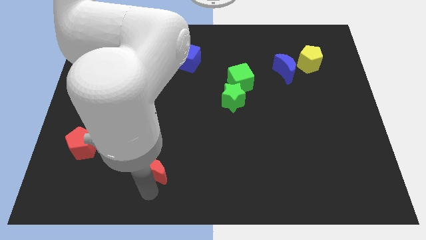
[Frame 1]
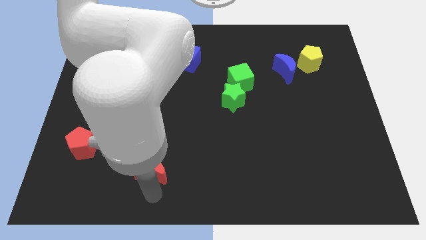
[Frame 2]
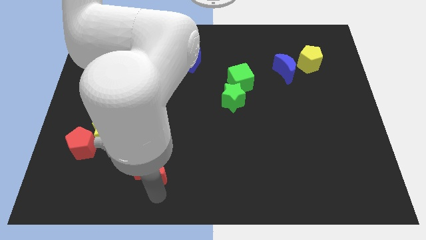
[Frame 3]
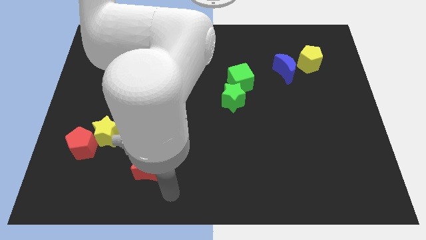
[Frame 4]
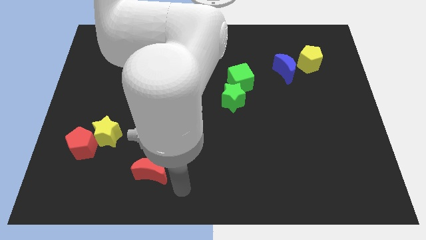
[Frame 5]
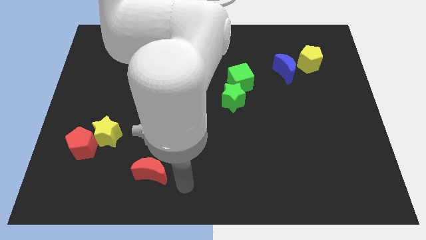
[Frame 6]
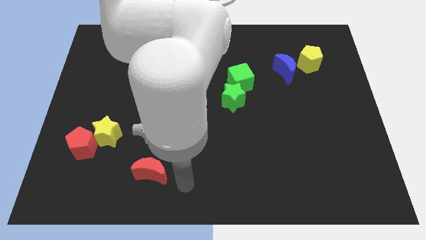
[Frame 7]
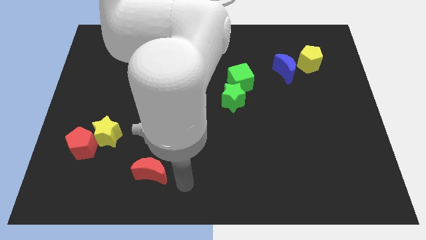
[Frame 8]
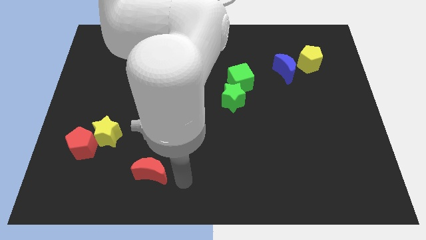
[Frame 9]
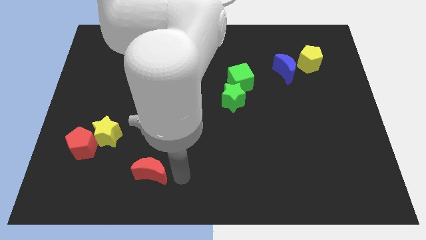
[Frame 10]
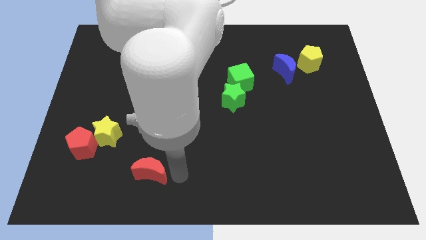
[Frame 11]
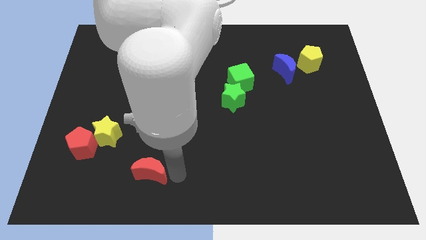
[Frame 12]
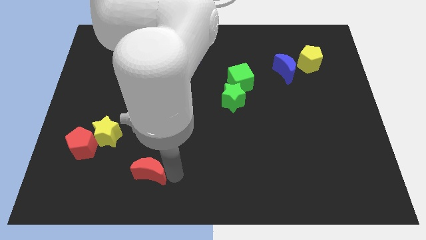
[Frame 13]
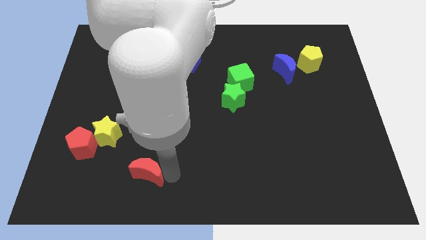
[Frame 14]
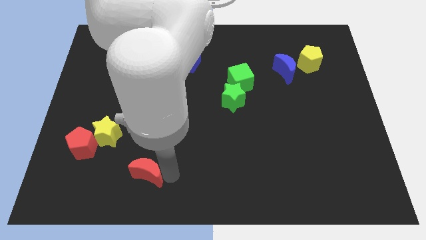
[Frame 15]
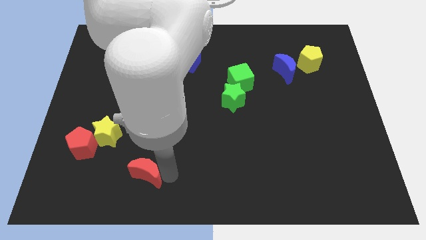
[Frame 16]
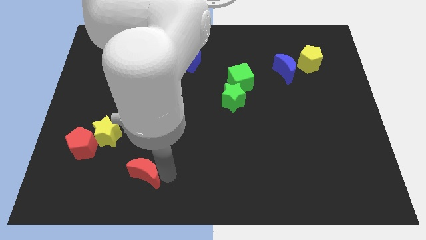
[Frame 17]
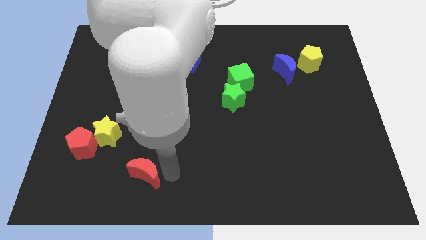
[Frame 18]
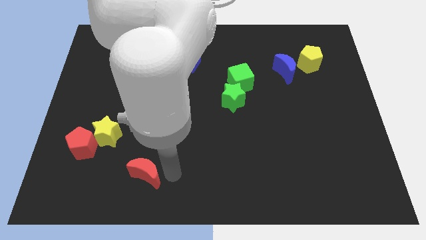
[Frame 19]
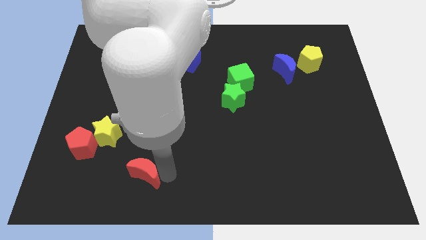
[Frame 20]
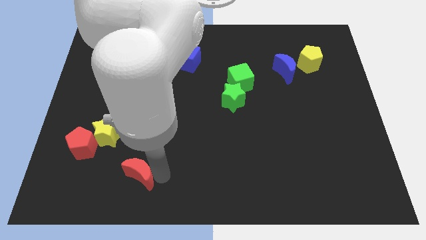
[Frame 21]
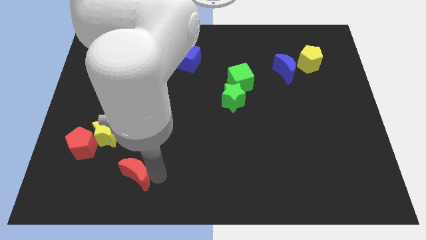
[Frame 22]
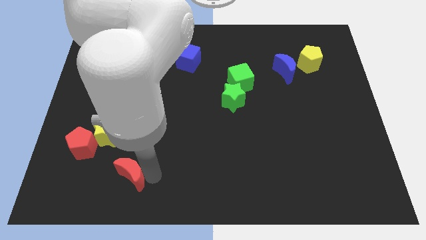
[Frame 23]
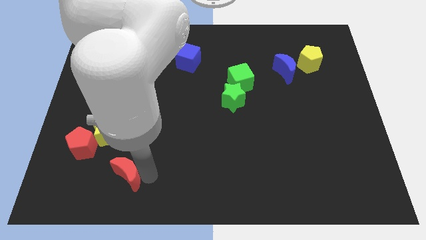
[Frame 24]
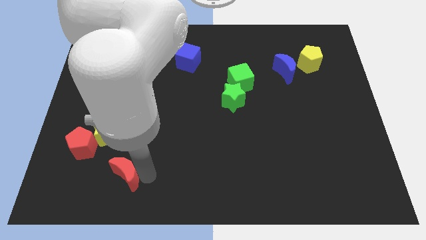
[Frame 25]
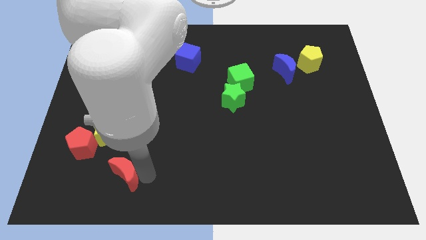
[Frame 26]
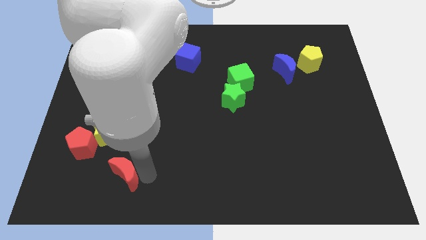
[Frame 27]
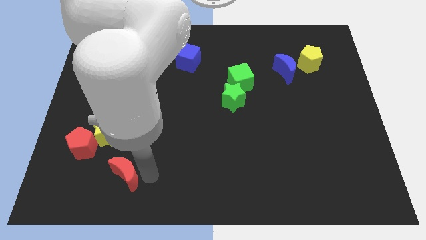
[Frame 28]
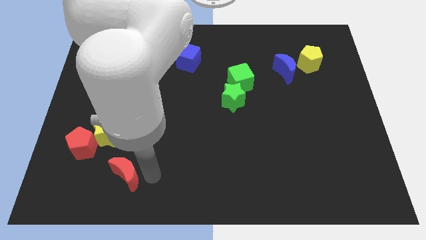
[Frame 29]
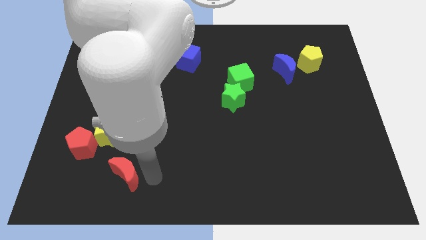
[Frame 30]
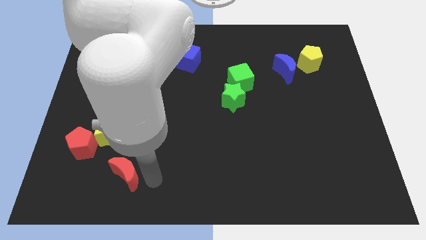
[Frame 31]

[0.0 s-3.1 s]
move red moon towards bottom left

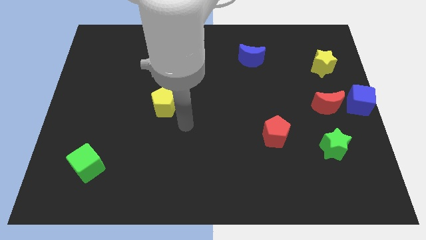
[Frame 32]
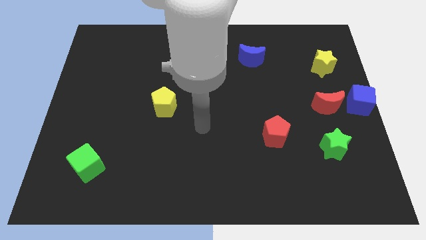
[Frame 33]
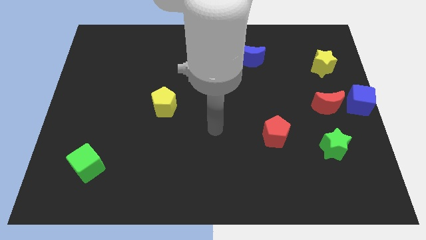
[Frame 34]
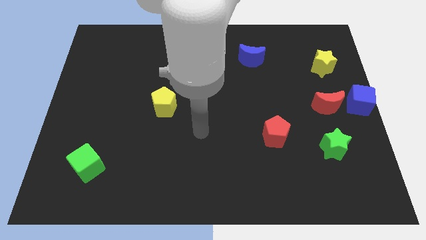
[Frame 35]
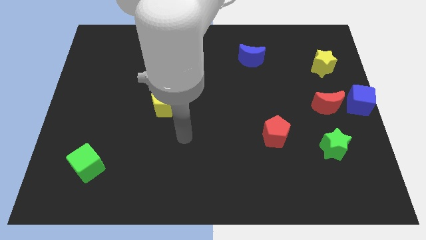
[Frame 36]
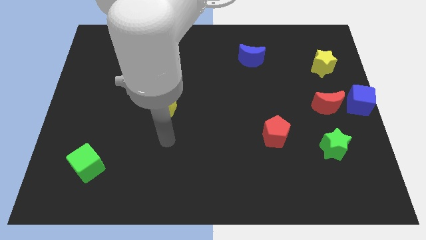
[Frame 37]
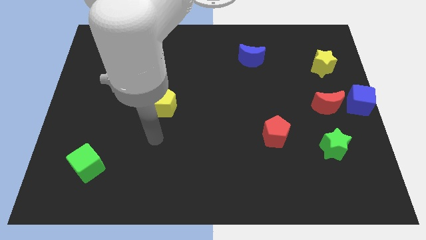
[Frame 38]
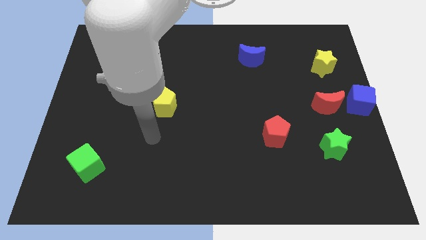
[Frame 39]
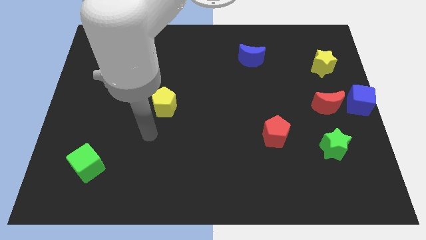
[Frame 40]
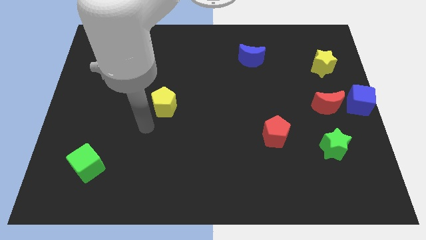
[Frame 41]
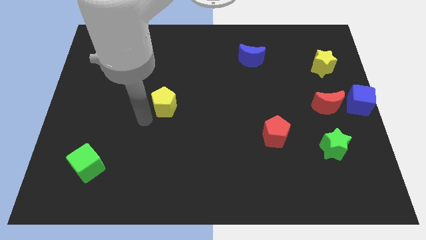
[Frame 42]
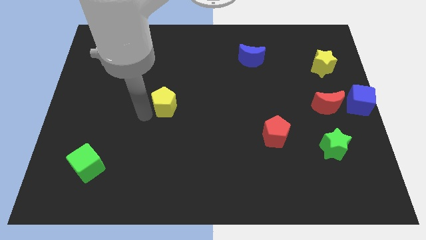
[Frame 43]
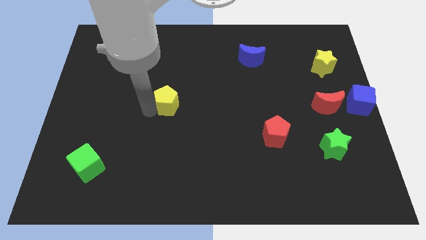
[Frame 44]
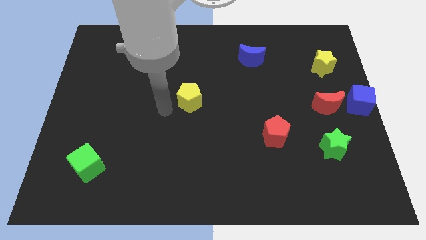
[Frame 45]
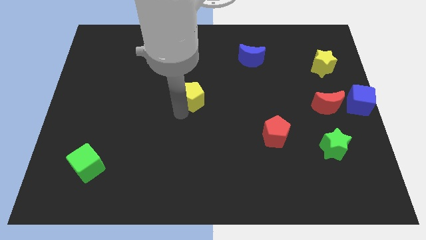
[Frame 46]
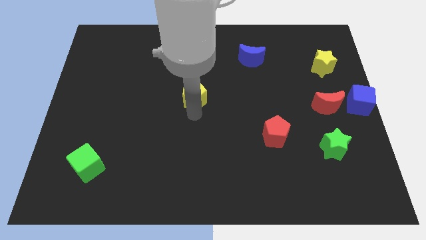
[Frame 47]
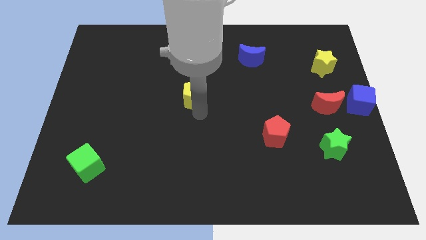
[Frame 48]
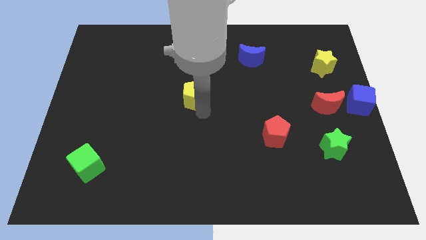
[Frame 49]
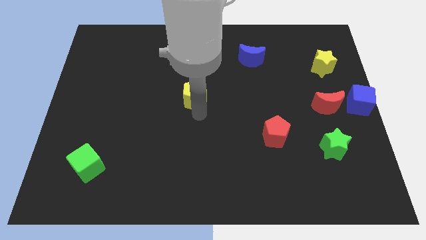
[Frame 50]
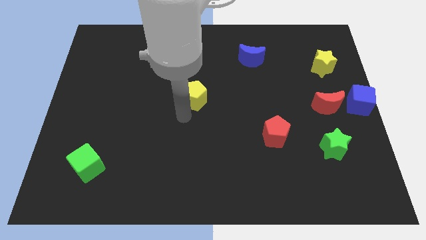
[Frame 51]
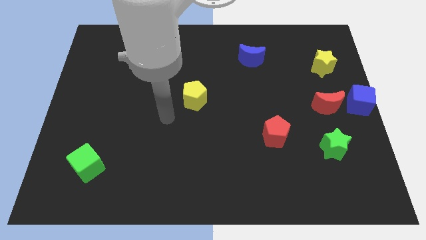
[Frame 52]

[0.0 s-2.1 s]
put the yellow pentagon parallel to red moon

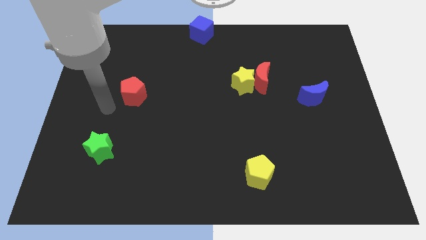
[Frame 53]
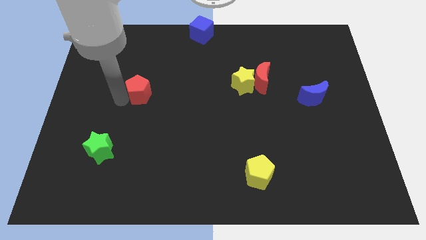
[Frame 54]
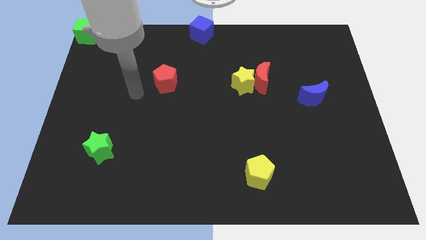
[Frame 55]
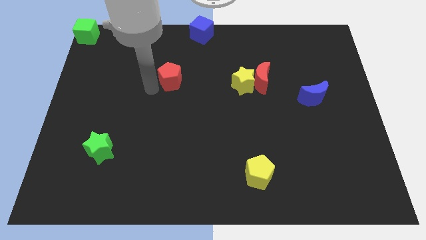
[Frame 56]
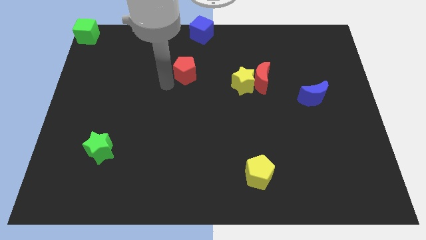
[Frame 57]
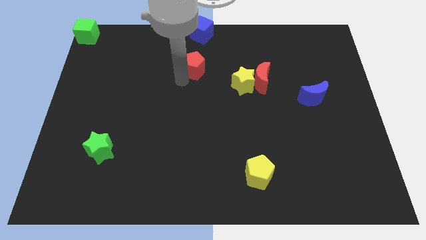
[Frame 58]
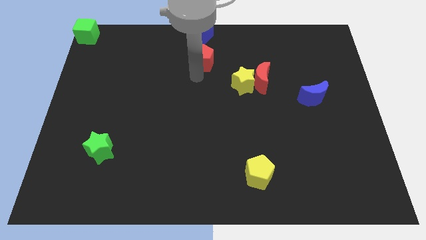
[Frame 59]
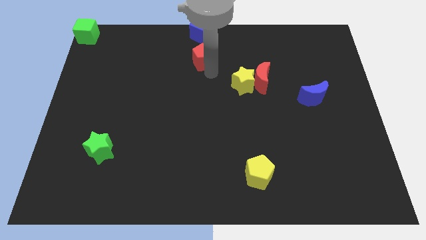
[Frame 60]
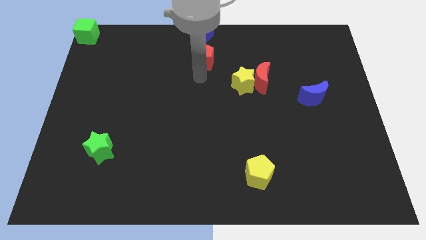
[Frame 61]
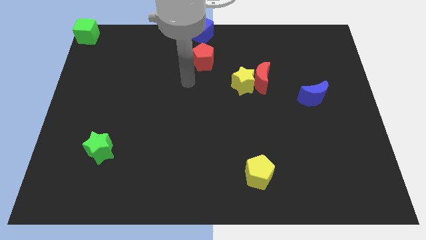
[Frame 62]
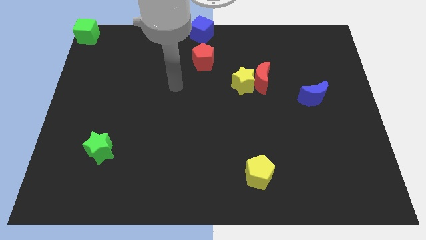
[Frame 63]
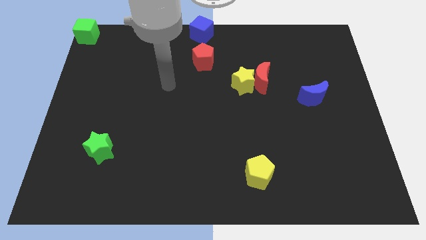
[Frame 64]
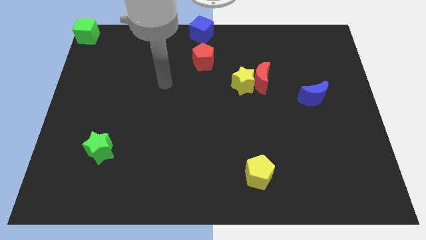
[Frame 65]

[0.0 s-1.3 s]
place the red pentagon towards the bottom to the blue cube

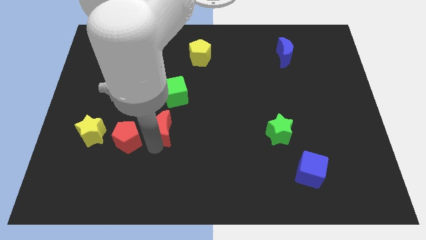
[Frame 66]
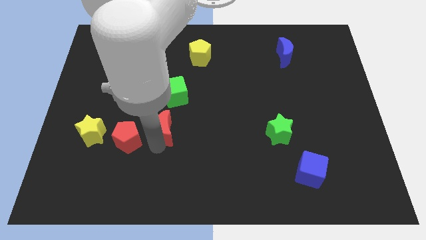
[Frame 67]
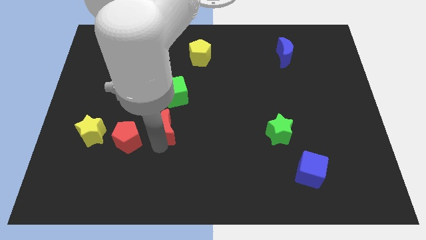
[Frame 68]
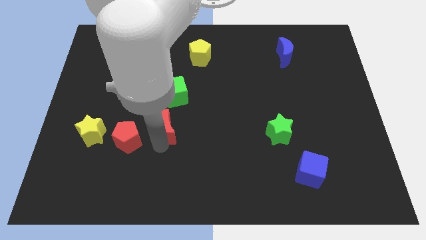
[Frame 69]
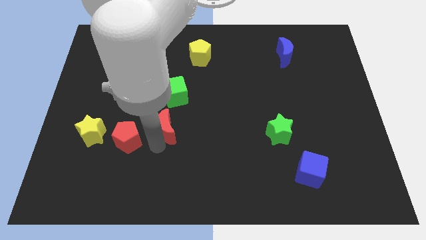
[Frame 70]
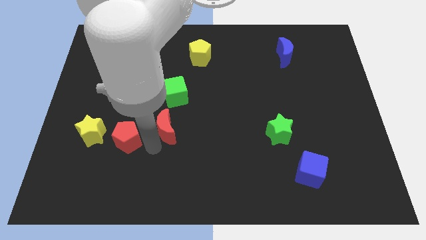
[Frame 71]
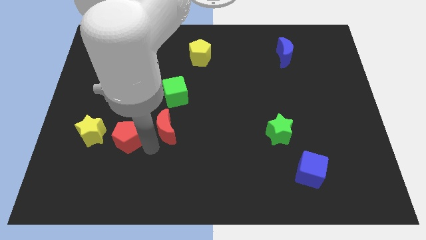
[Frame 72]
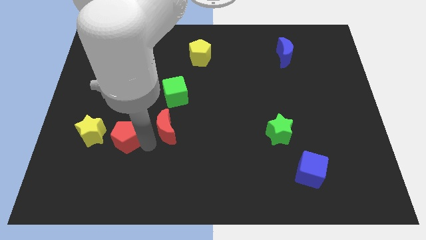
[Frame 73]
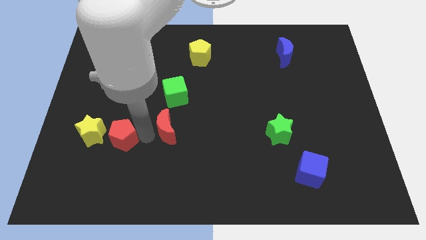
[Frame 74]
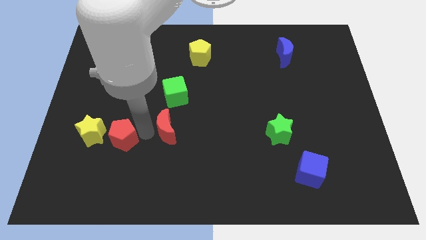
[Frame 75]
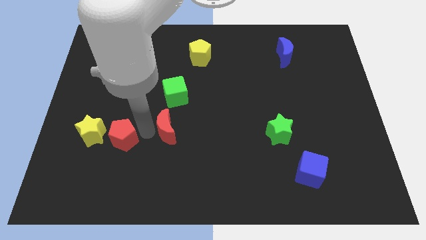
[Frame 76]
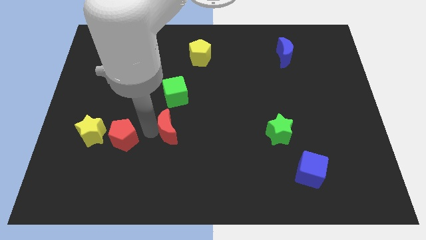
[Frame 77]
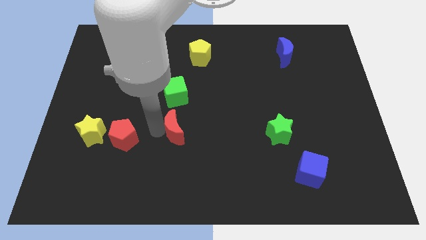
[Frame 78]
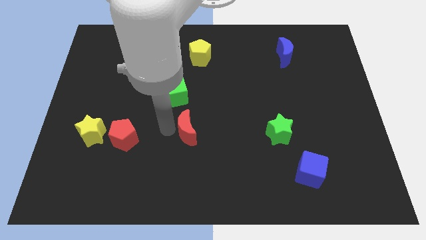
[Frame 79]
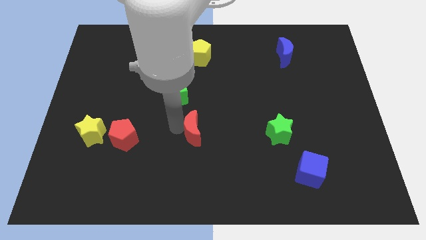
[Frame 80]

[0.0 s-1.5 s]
move the red moon to the right side of the table

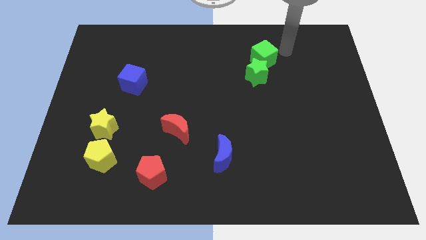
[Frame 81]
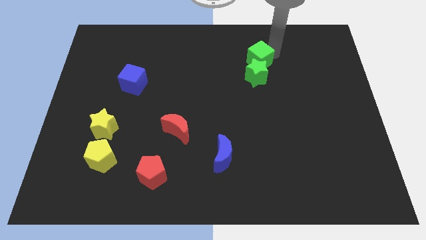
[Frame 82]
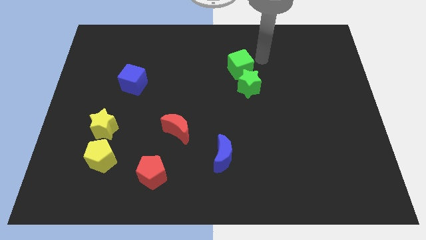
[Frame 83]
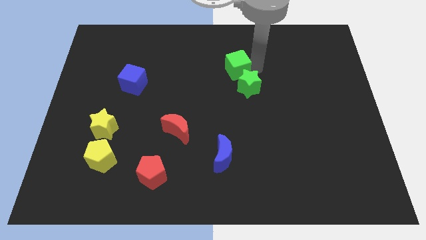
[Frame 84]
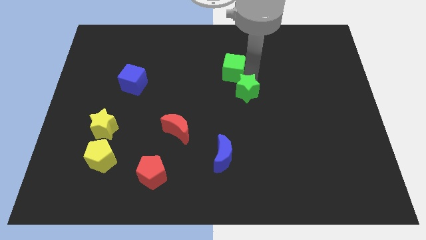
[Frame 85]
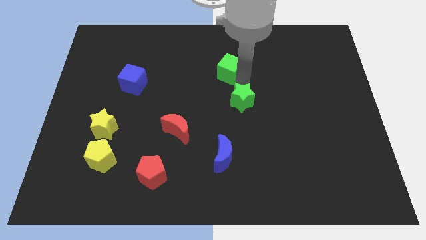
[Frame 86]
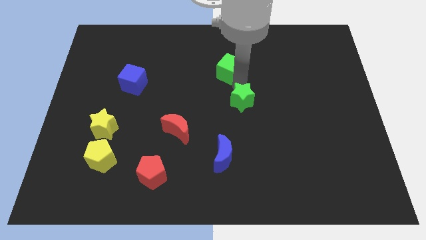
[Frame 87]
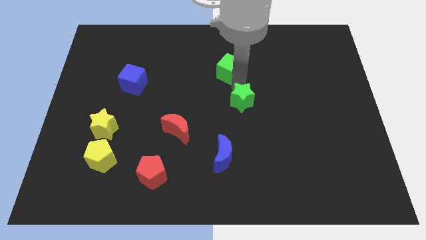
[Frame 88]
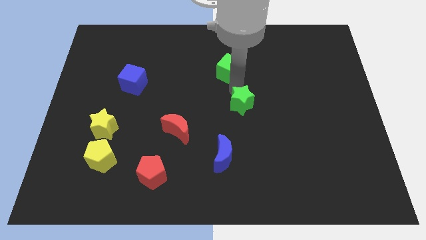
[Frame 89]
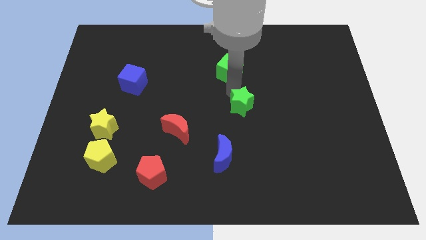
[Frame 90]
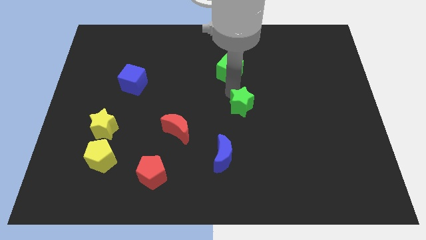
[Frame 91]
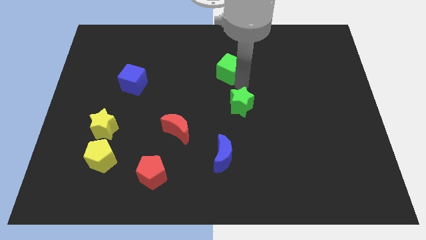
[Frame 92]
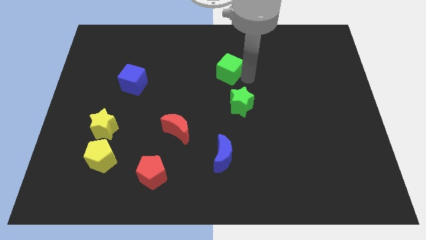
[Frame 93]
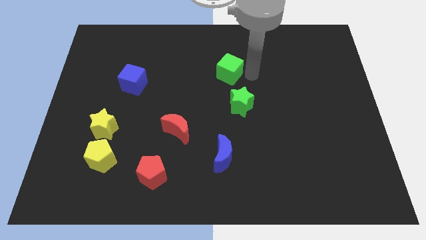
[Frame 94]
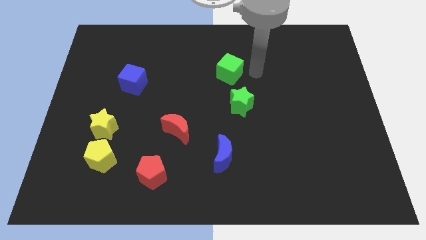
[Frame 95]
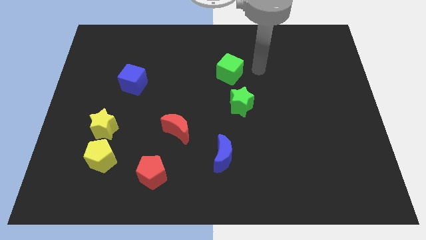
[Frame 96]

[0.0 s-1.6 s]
separate green cube and the green star
